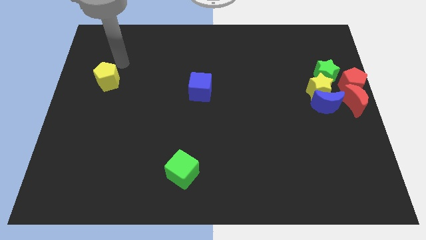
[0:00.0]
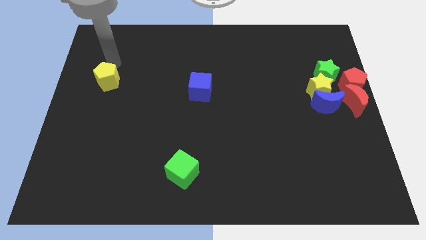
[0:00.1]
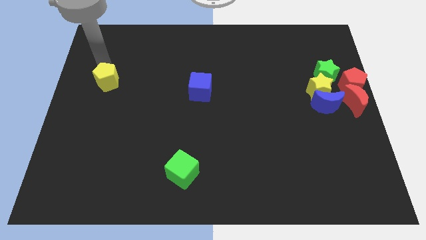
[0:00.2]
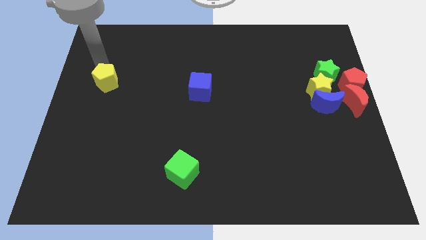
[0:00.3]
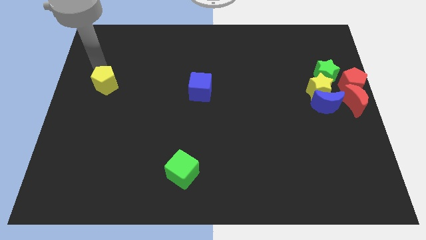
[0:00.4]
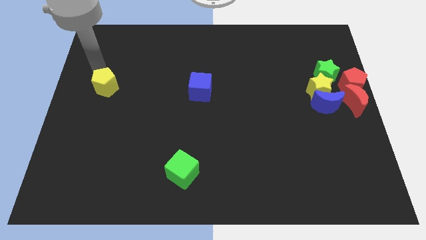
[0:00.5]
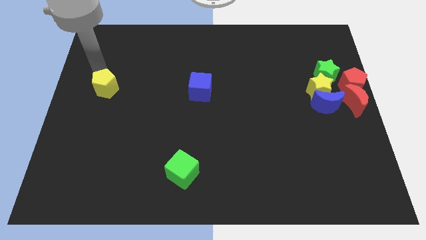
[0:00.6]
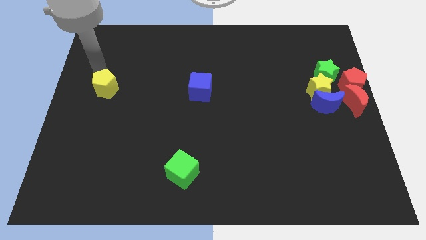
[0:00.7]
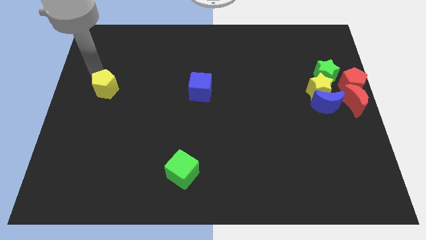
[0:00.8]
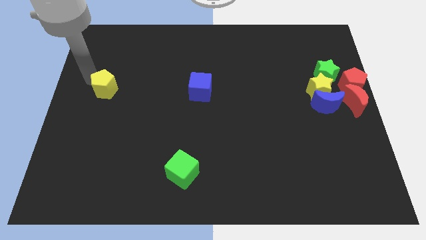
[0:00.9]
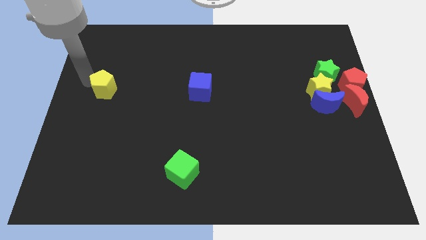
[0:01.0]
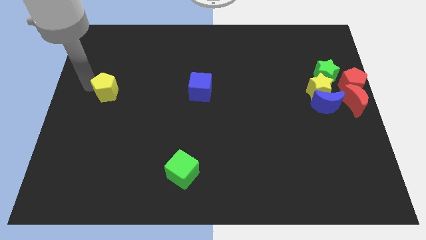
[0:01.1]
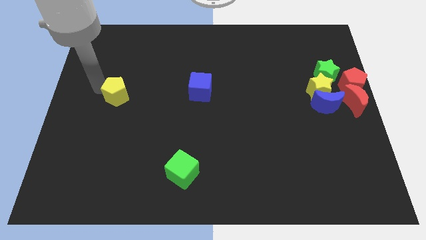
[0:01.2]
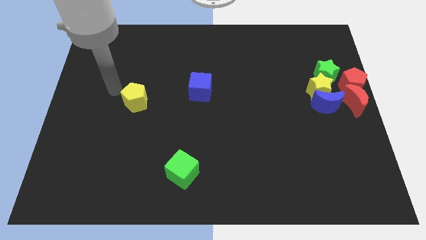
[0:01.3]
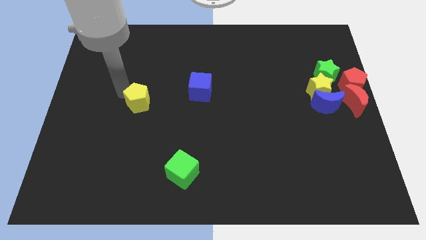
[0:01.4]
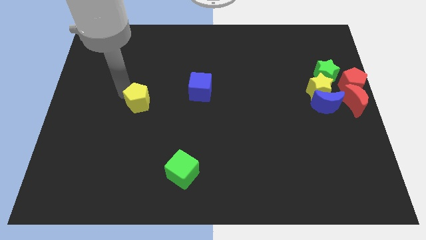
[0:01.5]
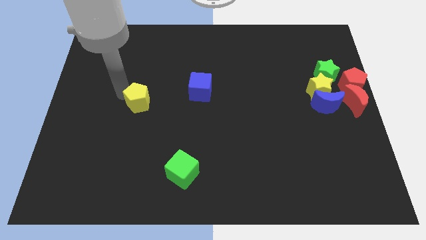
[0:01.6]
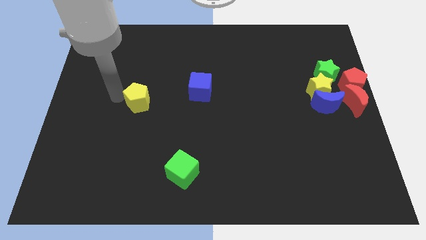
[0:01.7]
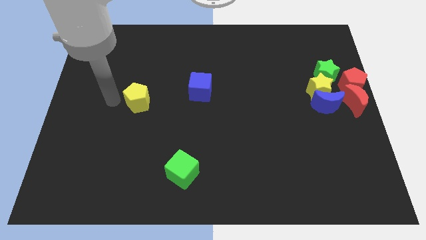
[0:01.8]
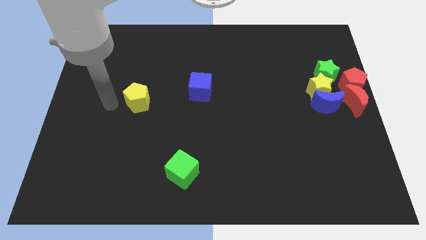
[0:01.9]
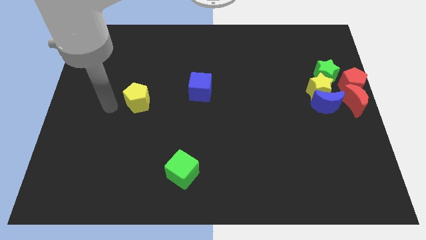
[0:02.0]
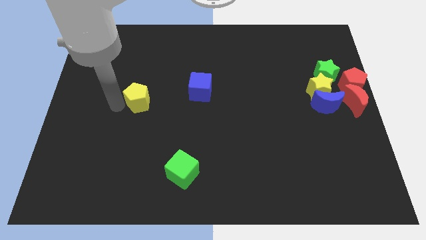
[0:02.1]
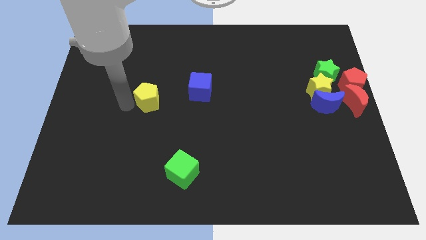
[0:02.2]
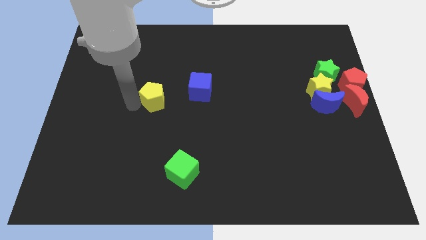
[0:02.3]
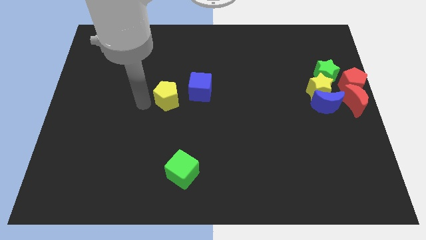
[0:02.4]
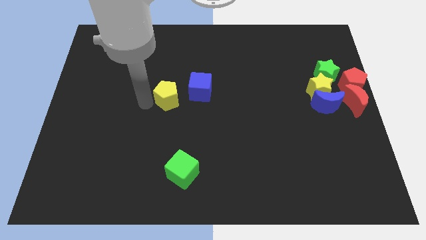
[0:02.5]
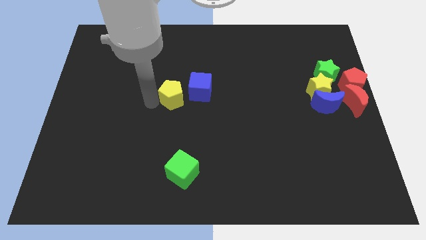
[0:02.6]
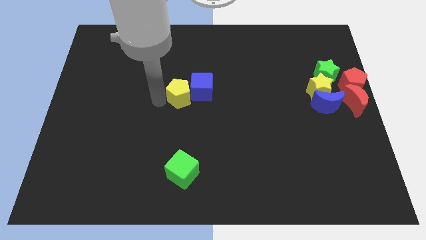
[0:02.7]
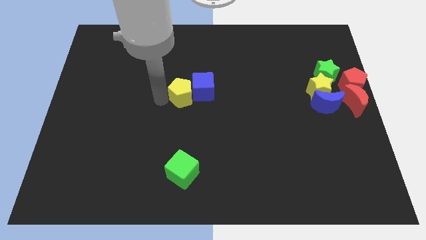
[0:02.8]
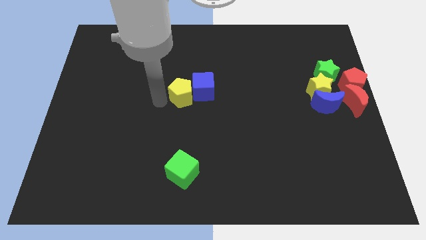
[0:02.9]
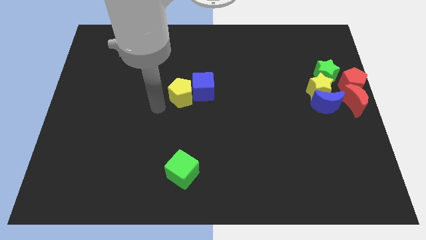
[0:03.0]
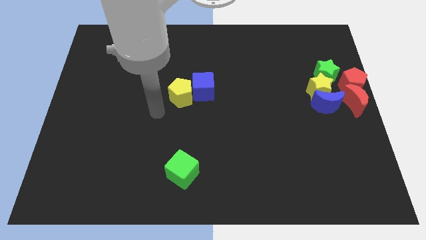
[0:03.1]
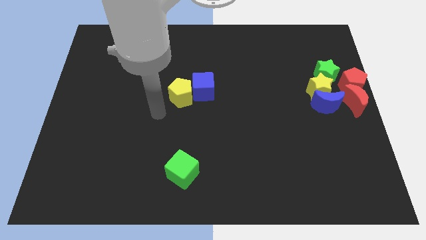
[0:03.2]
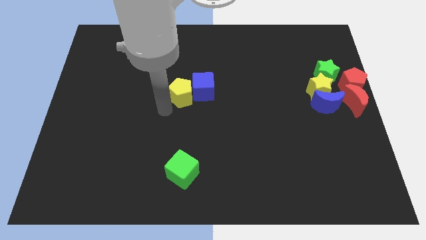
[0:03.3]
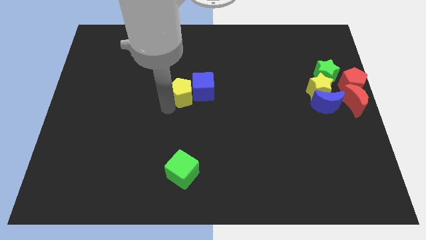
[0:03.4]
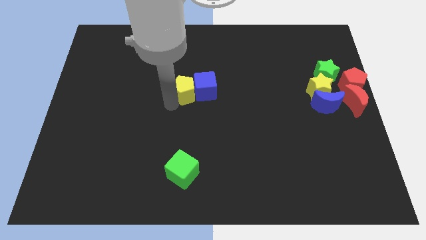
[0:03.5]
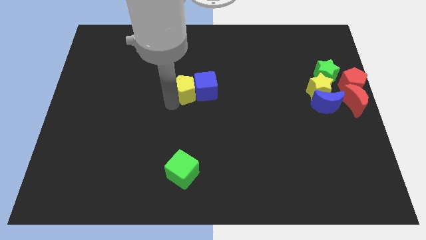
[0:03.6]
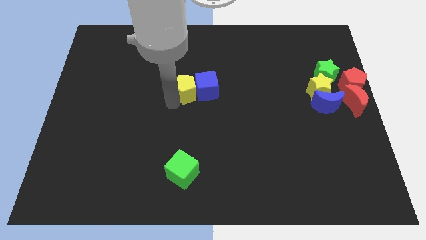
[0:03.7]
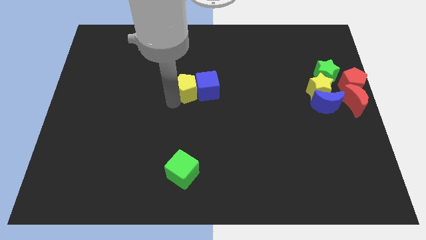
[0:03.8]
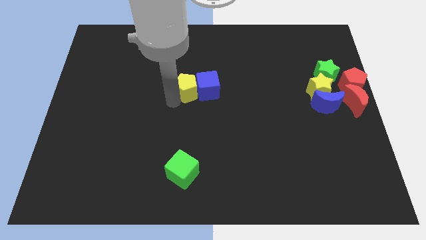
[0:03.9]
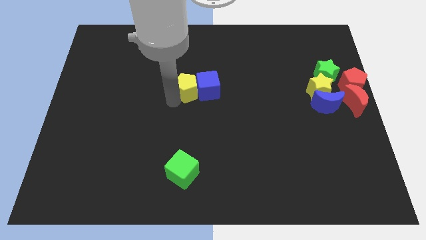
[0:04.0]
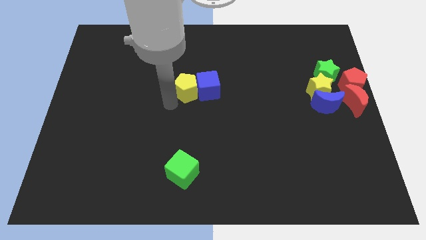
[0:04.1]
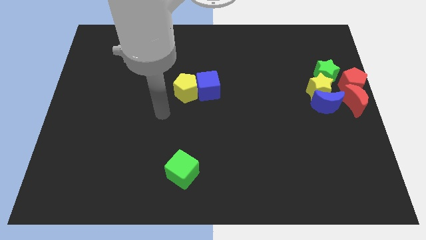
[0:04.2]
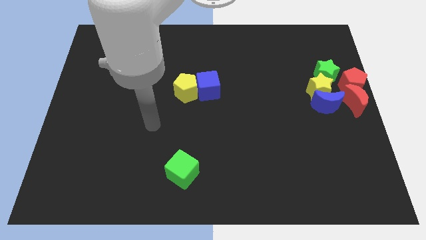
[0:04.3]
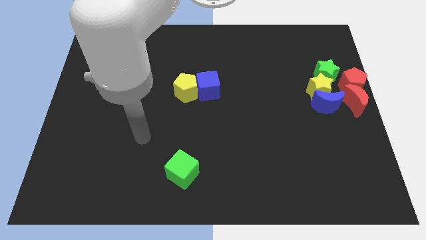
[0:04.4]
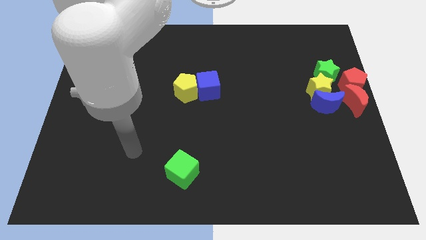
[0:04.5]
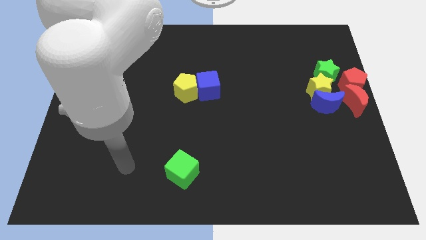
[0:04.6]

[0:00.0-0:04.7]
push the yellow pentagon into the blue cube

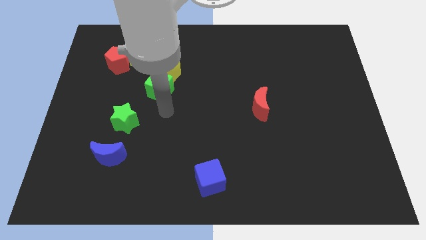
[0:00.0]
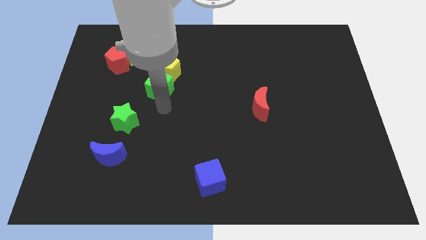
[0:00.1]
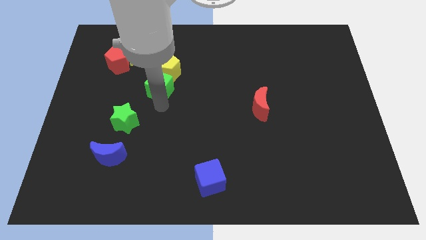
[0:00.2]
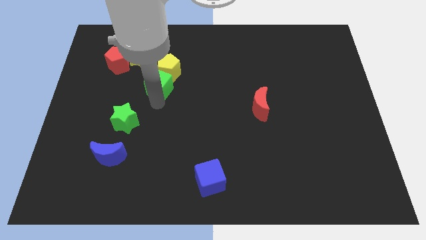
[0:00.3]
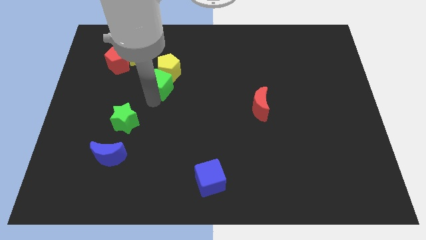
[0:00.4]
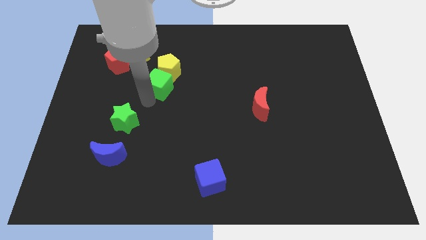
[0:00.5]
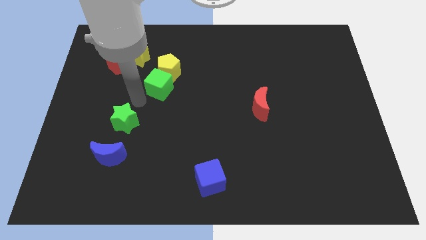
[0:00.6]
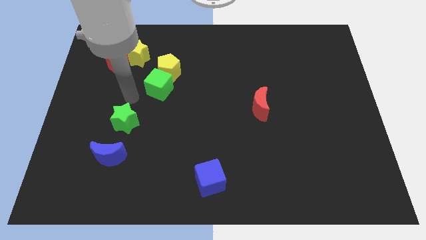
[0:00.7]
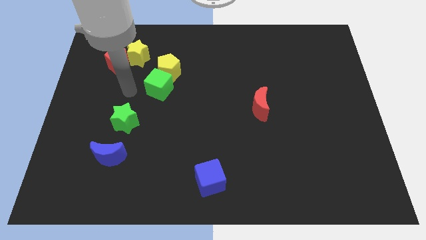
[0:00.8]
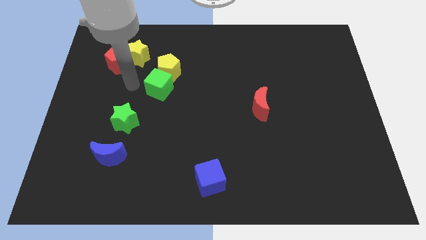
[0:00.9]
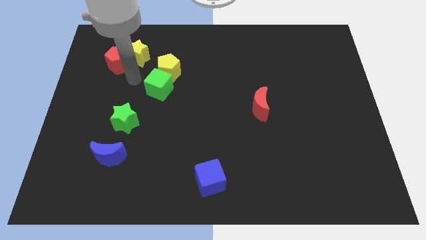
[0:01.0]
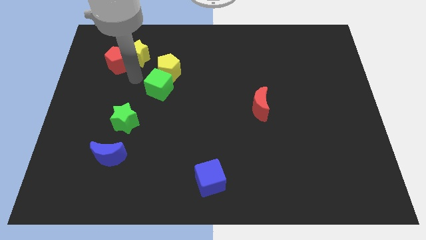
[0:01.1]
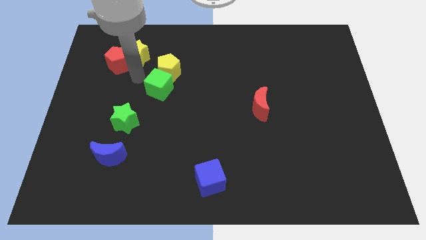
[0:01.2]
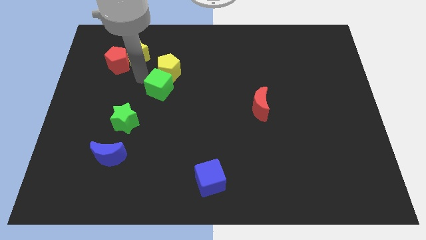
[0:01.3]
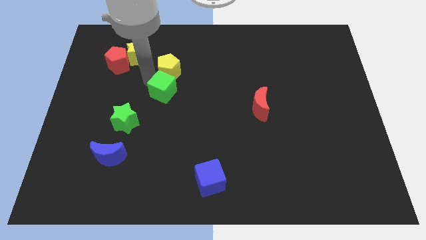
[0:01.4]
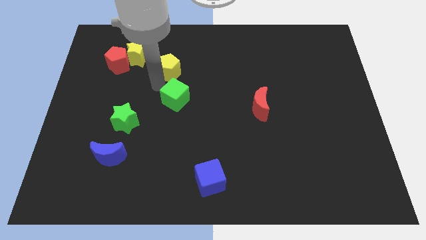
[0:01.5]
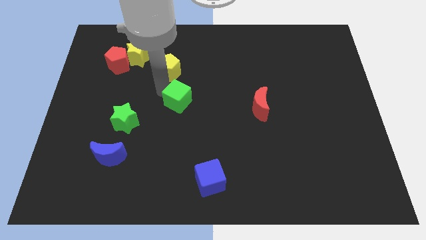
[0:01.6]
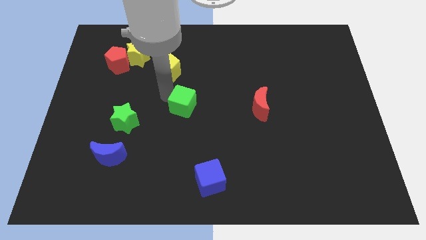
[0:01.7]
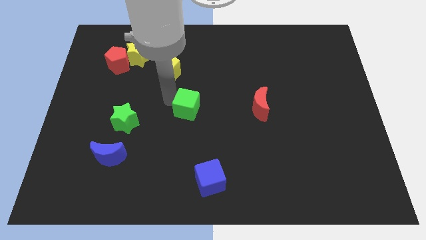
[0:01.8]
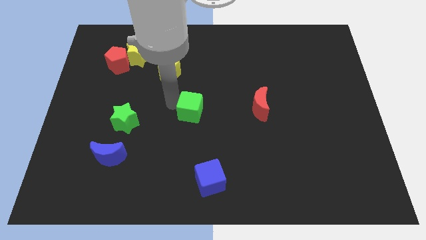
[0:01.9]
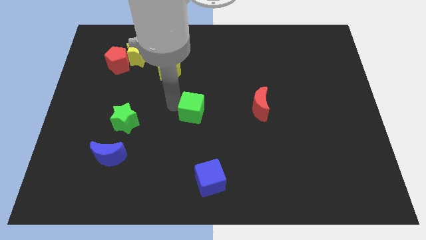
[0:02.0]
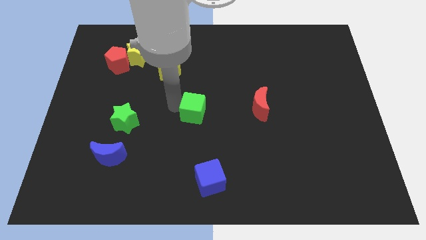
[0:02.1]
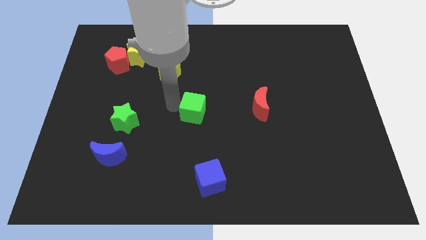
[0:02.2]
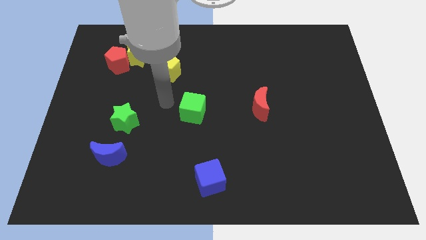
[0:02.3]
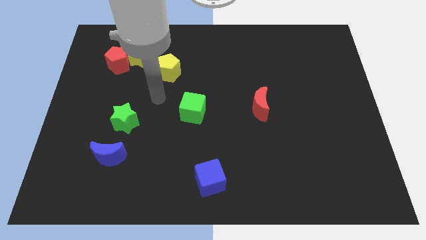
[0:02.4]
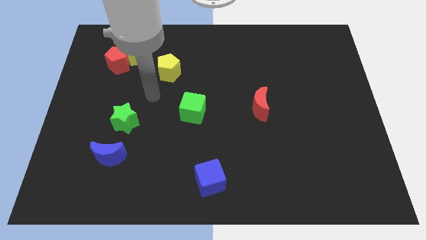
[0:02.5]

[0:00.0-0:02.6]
place the green cube to the left of red moon

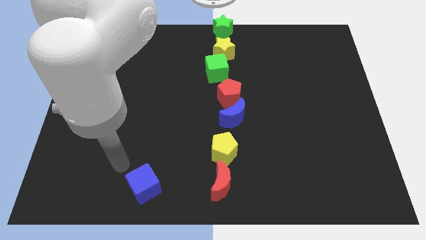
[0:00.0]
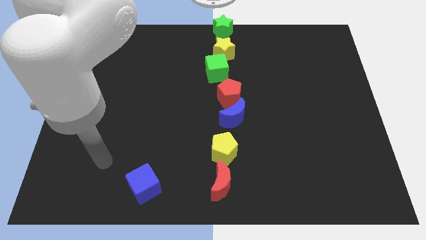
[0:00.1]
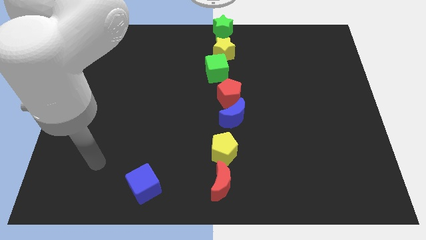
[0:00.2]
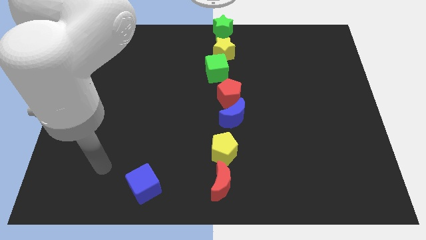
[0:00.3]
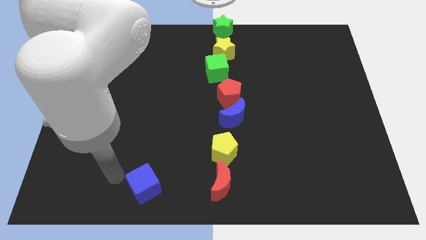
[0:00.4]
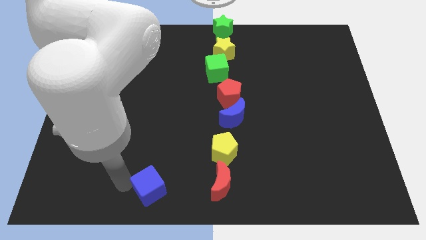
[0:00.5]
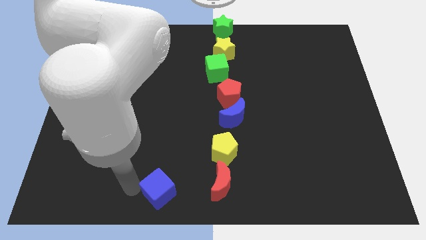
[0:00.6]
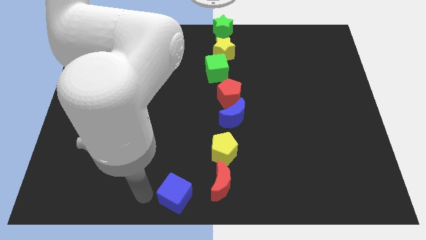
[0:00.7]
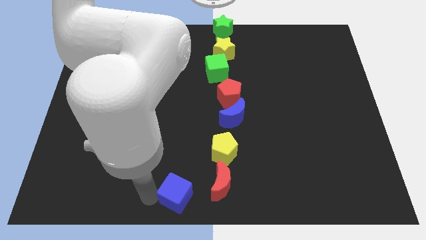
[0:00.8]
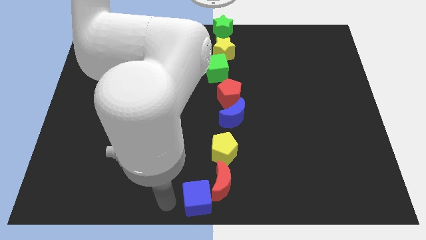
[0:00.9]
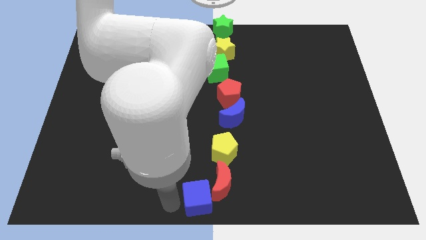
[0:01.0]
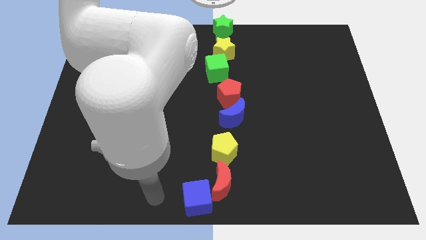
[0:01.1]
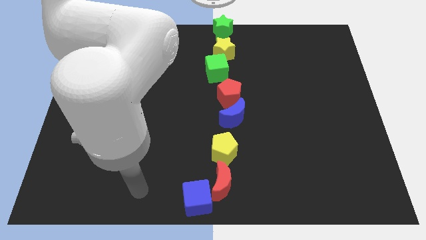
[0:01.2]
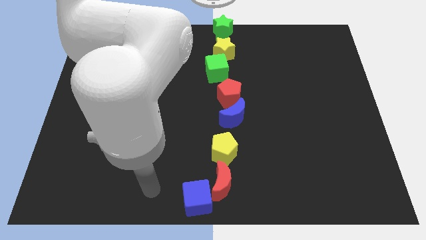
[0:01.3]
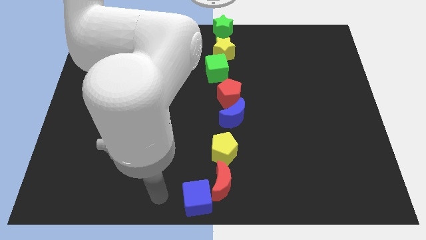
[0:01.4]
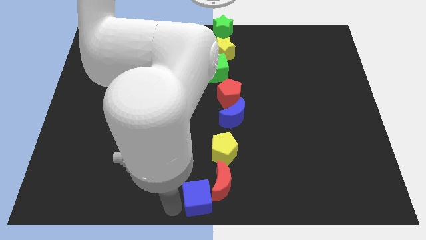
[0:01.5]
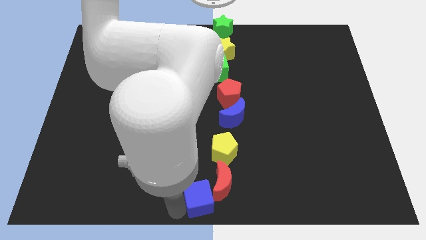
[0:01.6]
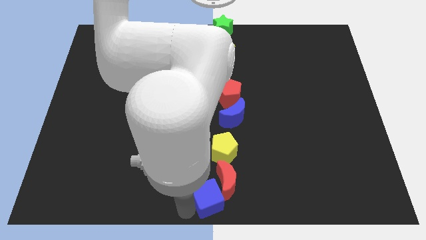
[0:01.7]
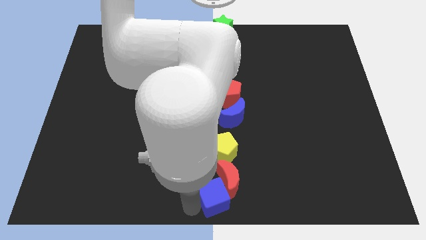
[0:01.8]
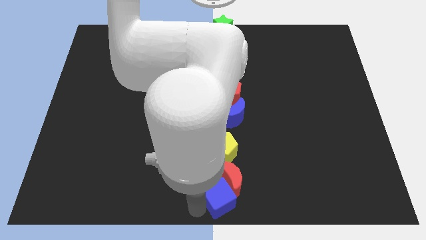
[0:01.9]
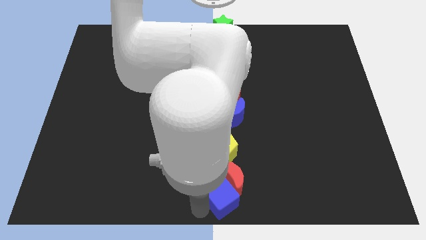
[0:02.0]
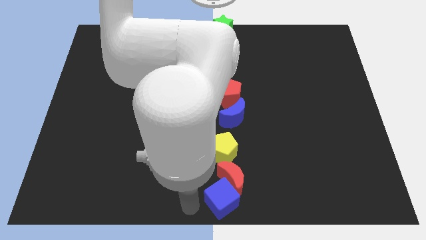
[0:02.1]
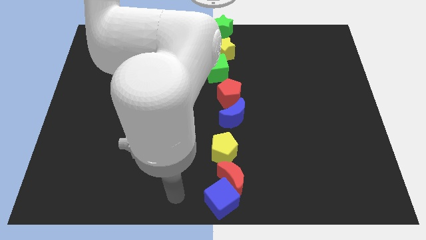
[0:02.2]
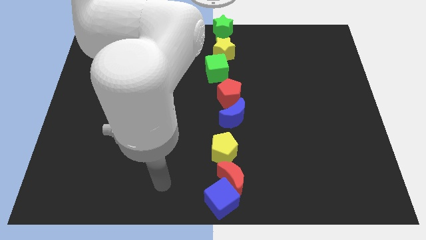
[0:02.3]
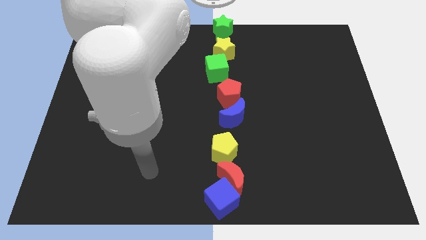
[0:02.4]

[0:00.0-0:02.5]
place blue cube below red moon
